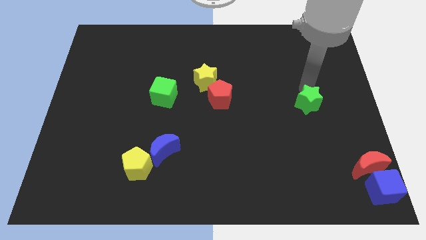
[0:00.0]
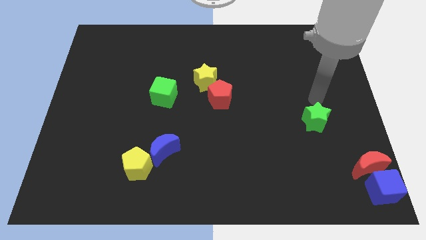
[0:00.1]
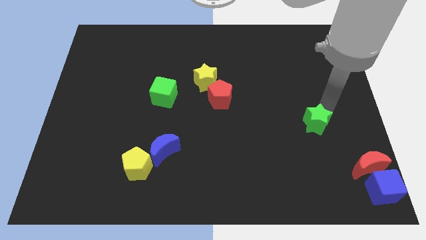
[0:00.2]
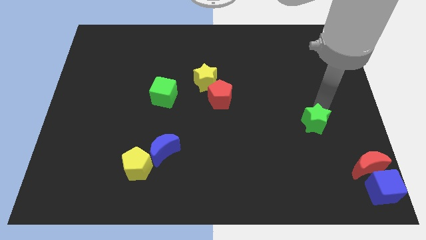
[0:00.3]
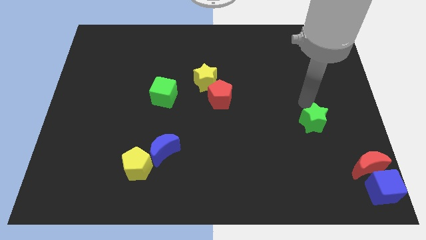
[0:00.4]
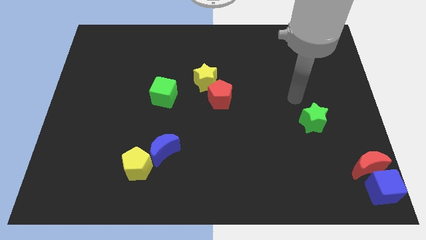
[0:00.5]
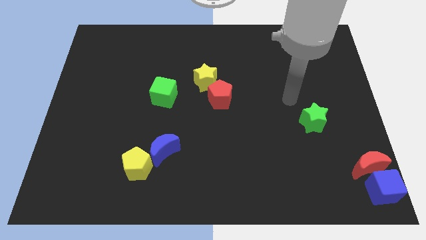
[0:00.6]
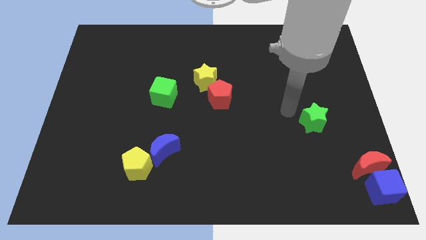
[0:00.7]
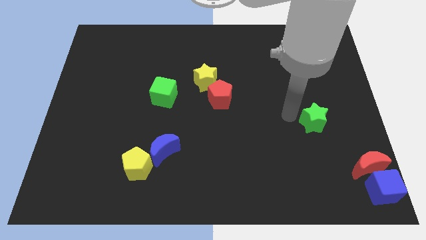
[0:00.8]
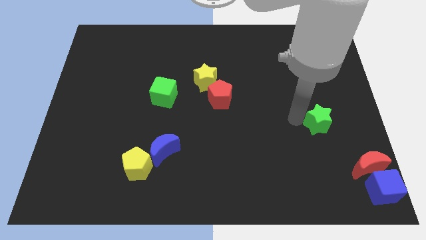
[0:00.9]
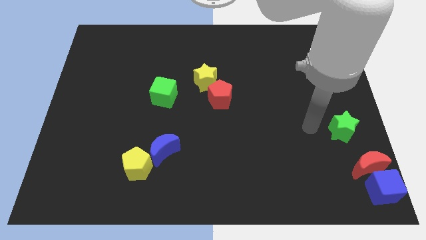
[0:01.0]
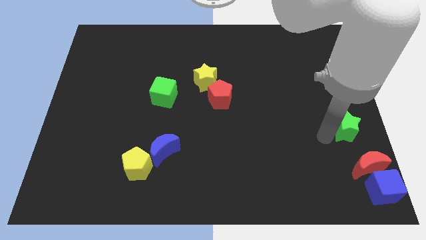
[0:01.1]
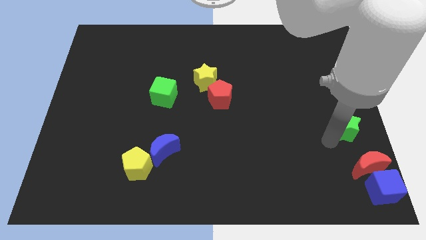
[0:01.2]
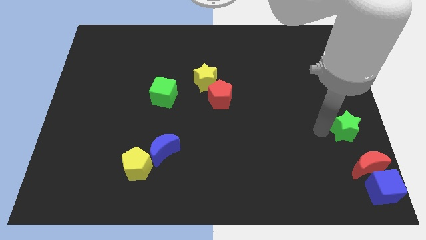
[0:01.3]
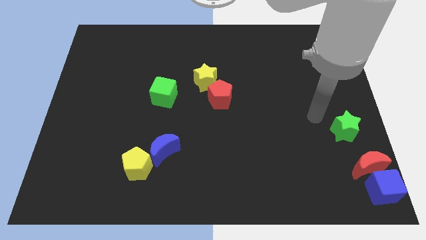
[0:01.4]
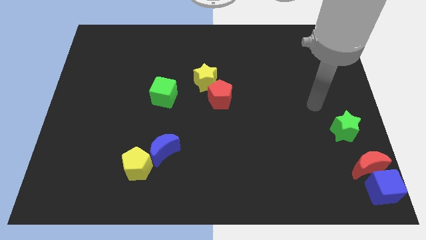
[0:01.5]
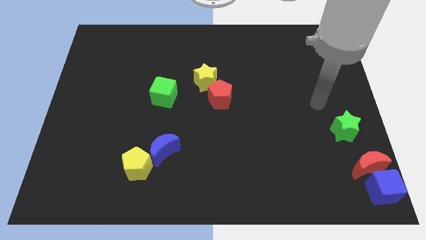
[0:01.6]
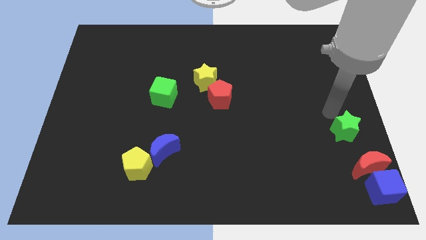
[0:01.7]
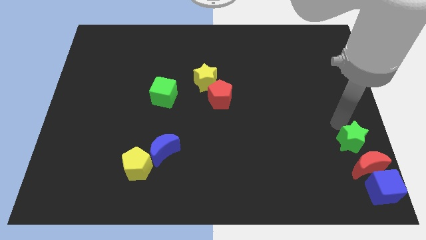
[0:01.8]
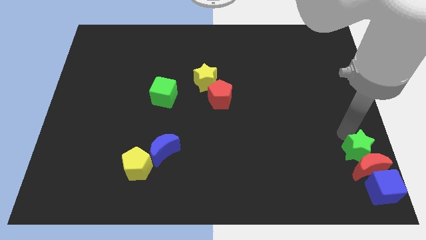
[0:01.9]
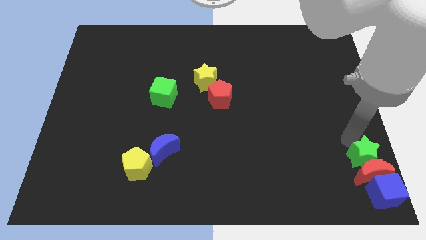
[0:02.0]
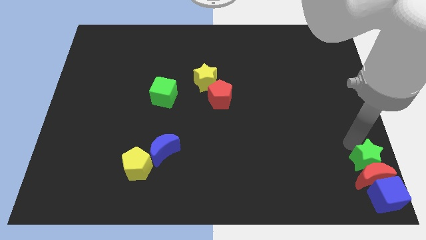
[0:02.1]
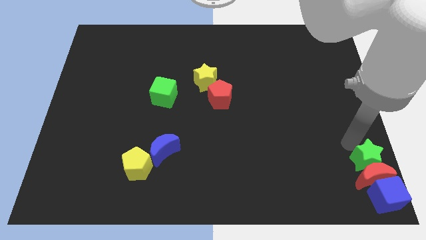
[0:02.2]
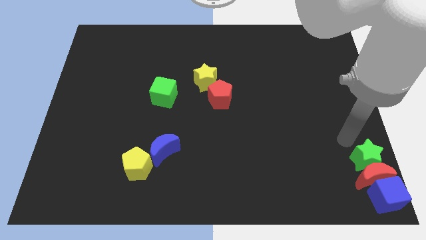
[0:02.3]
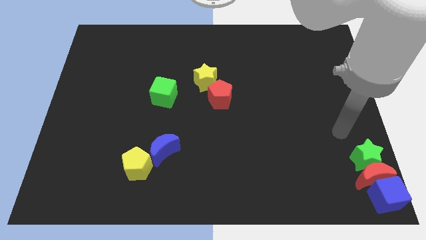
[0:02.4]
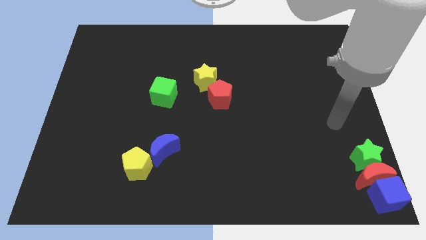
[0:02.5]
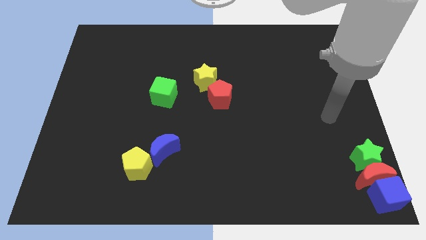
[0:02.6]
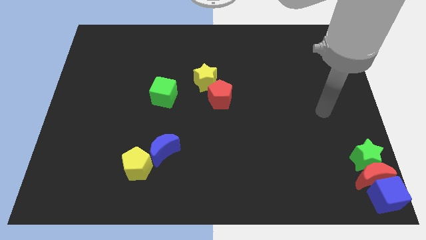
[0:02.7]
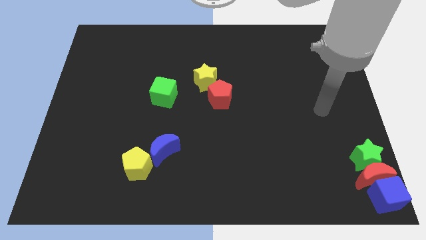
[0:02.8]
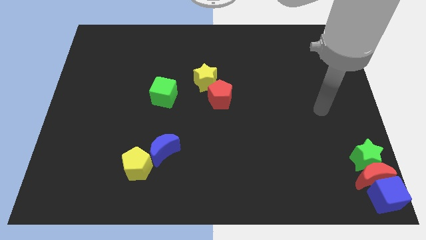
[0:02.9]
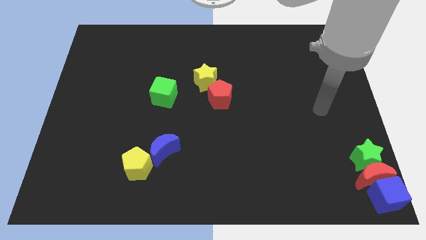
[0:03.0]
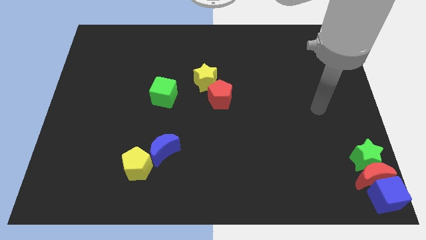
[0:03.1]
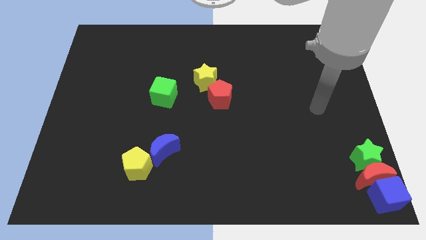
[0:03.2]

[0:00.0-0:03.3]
push the green star into the red moon

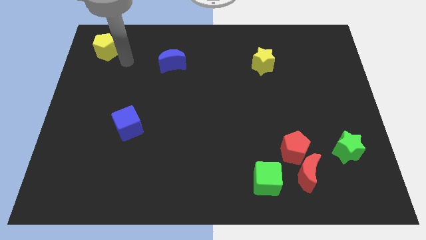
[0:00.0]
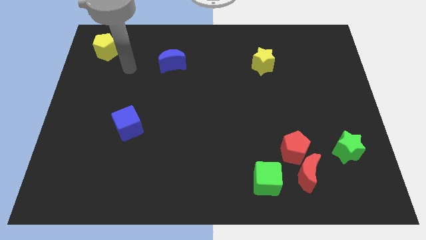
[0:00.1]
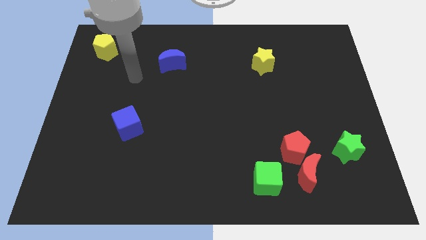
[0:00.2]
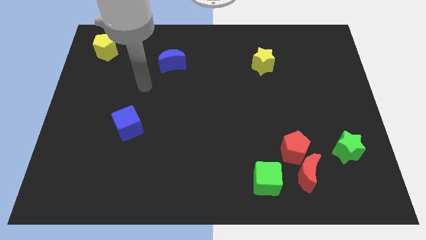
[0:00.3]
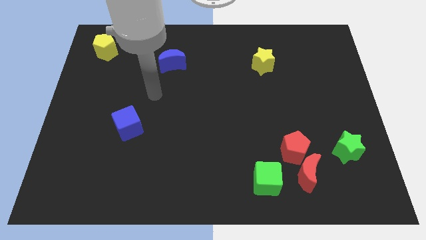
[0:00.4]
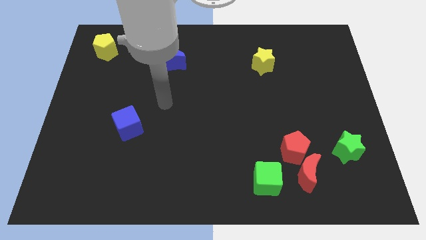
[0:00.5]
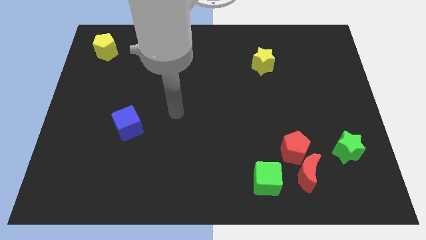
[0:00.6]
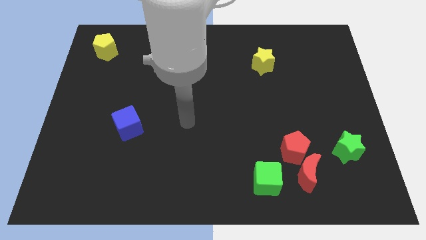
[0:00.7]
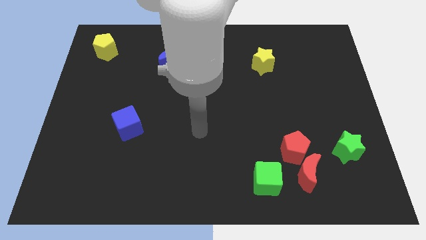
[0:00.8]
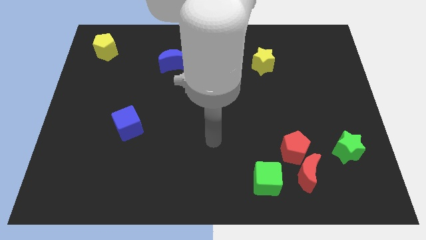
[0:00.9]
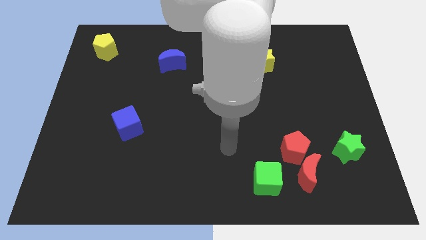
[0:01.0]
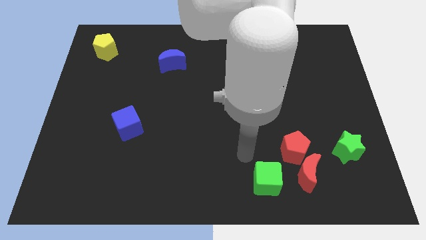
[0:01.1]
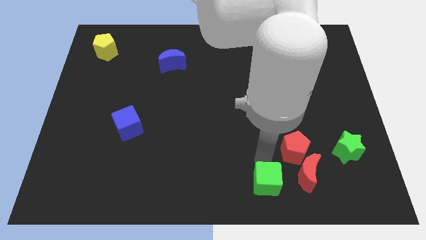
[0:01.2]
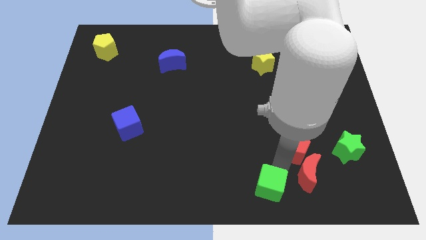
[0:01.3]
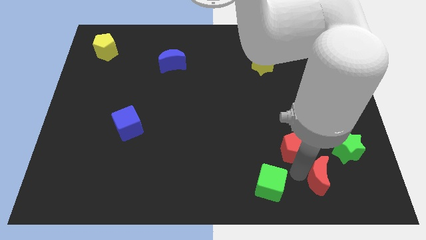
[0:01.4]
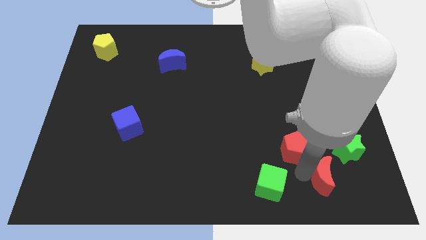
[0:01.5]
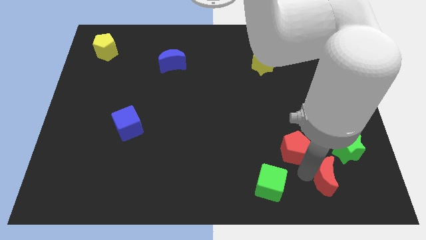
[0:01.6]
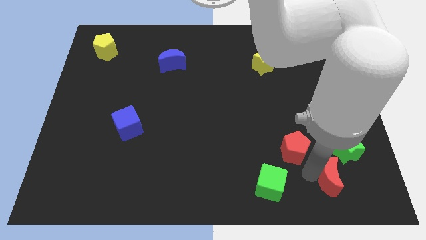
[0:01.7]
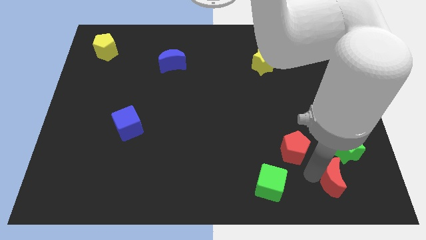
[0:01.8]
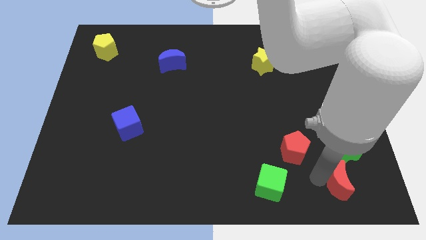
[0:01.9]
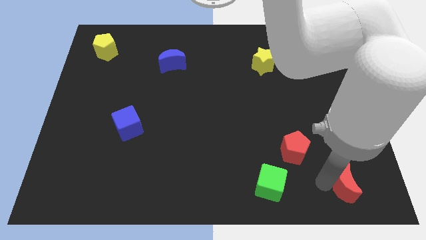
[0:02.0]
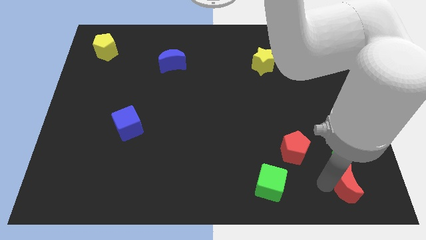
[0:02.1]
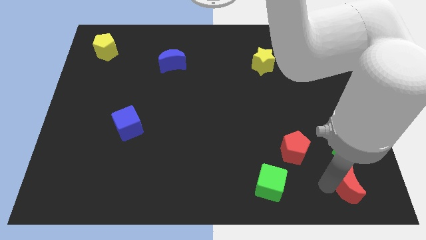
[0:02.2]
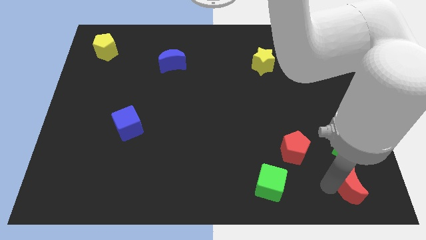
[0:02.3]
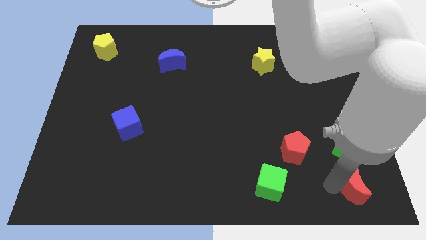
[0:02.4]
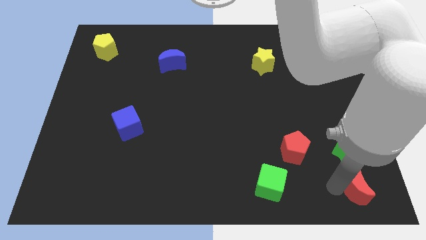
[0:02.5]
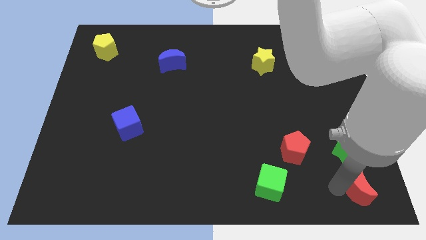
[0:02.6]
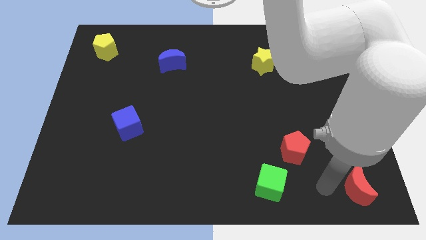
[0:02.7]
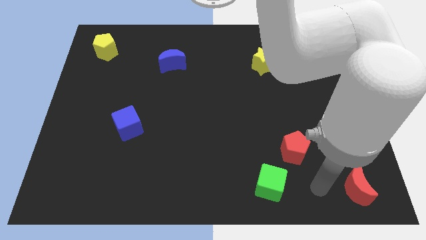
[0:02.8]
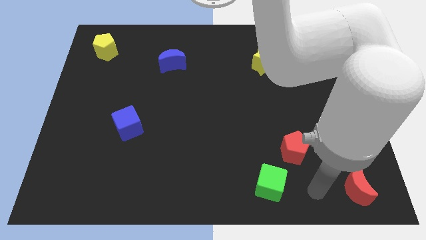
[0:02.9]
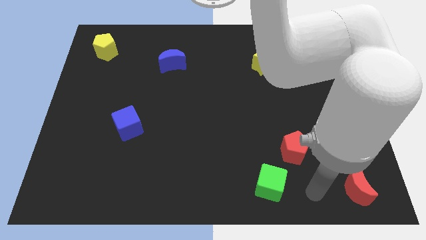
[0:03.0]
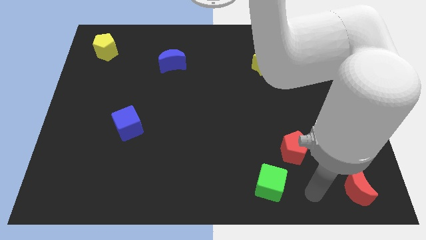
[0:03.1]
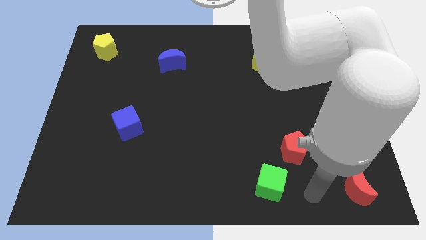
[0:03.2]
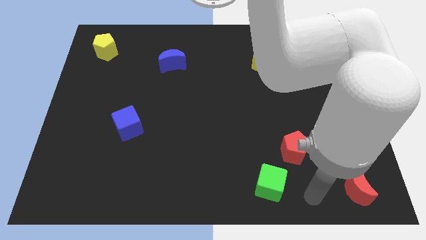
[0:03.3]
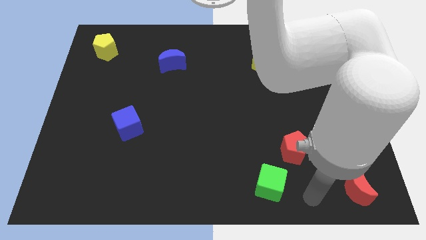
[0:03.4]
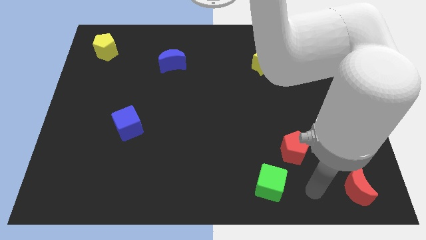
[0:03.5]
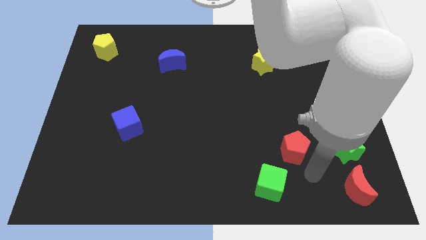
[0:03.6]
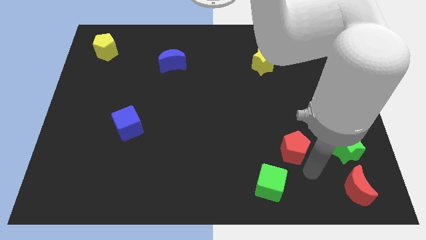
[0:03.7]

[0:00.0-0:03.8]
slightly move the red crescent towards the bottom right side

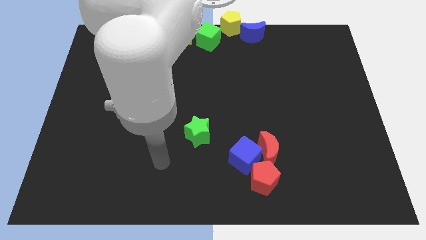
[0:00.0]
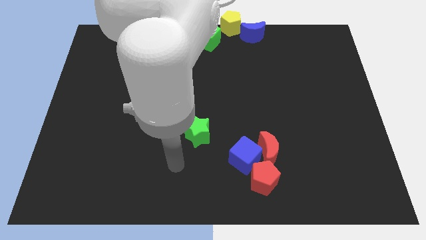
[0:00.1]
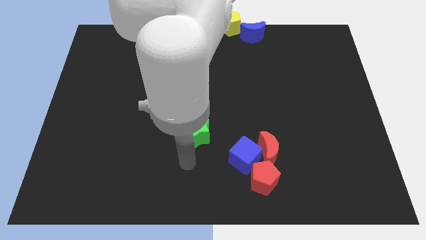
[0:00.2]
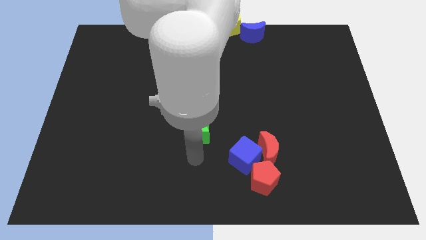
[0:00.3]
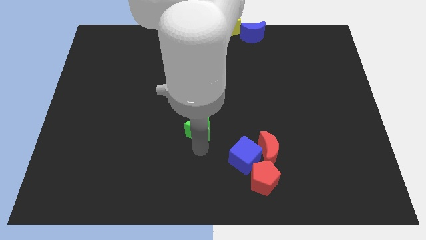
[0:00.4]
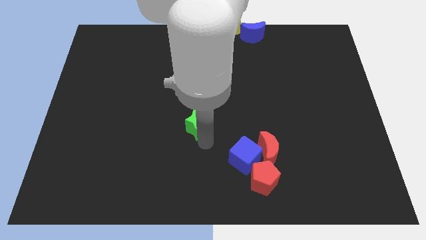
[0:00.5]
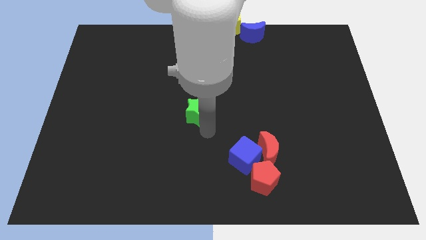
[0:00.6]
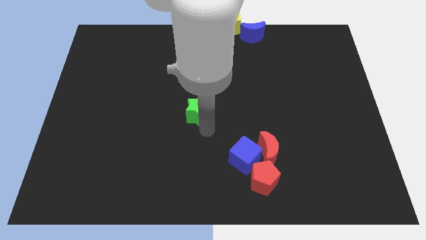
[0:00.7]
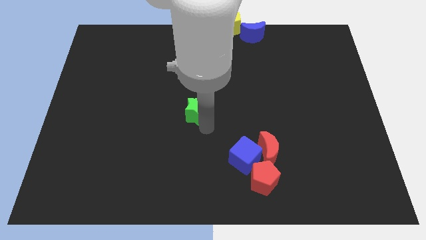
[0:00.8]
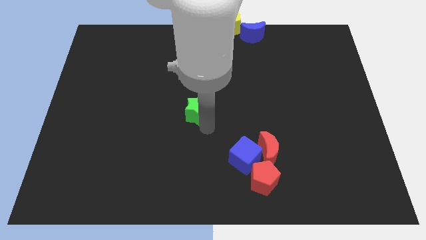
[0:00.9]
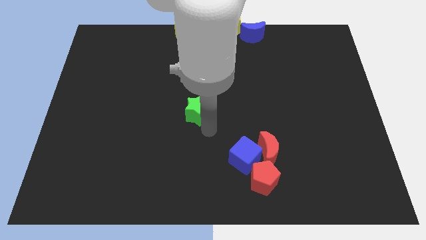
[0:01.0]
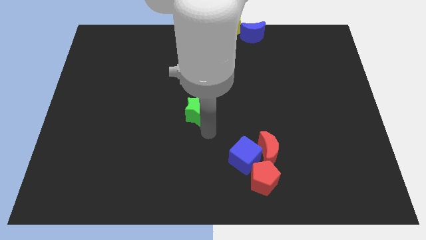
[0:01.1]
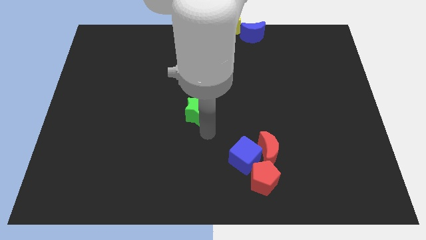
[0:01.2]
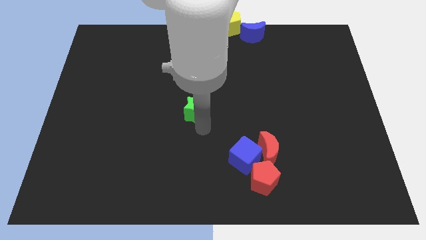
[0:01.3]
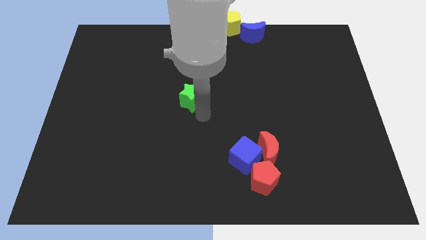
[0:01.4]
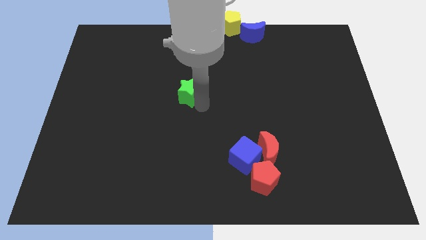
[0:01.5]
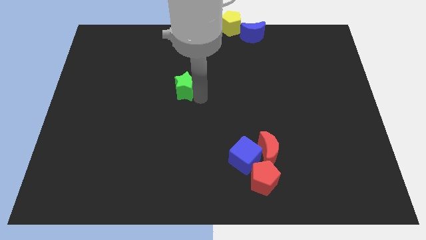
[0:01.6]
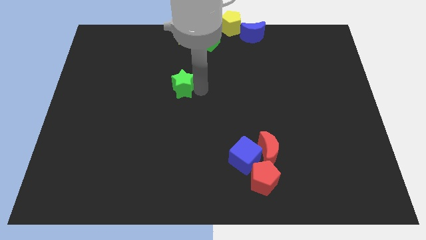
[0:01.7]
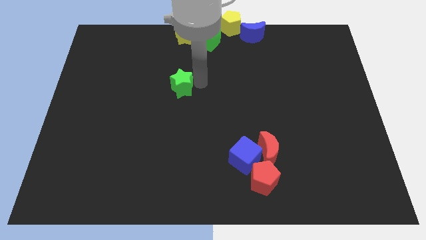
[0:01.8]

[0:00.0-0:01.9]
push the green star towards the center of the board
